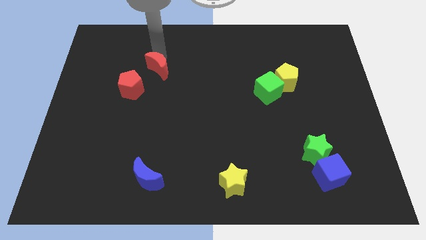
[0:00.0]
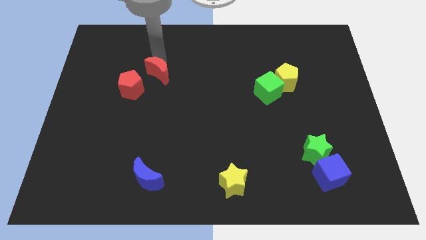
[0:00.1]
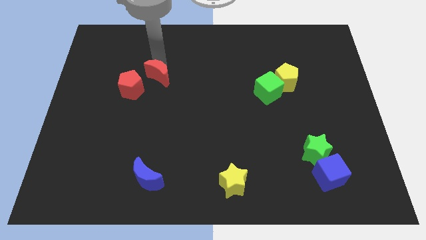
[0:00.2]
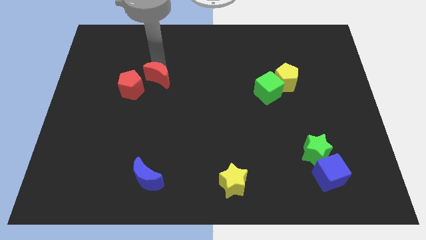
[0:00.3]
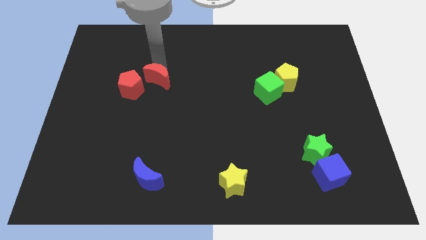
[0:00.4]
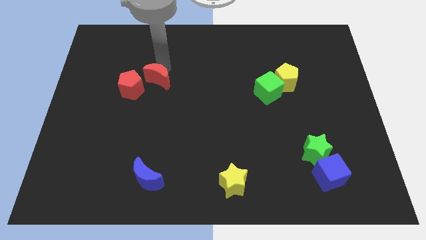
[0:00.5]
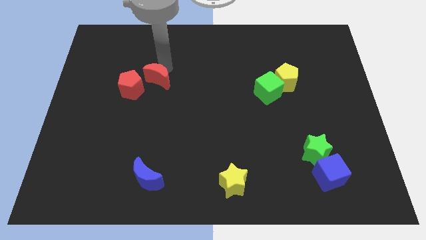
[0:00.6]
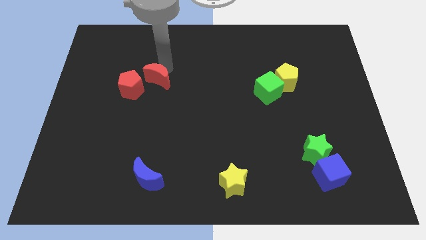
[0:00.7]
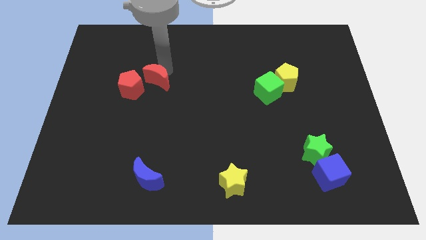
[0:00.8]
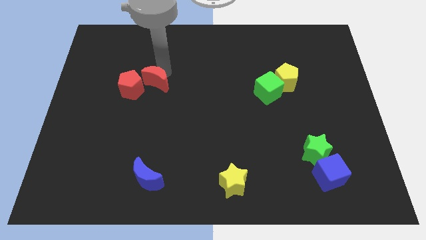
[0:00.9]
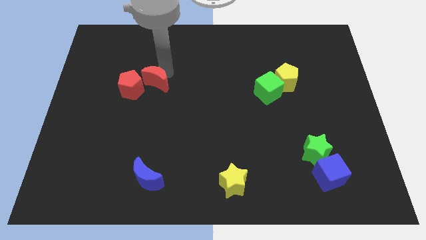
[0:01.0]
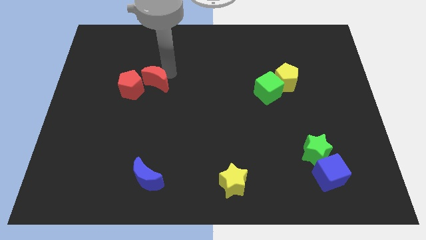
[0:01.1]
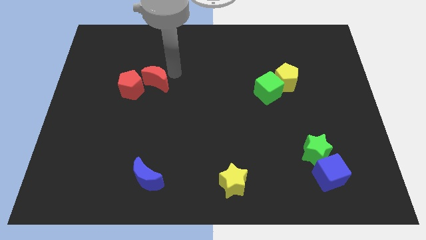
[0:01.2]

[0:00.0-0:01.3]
move red crescent towards the red pentagon

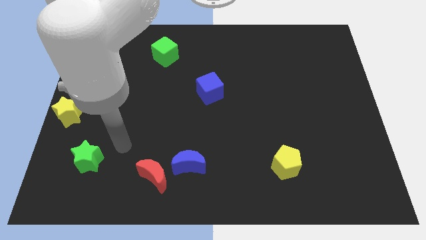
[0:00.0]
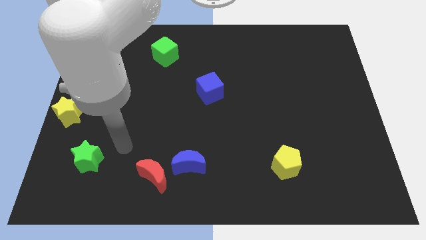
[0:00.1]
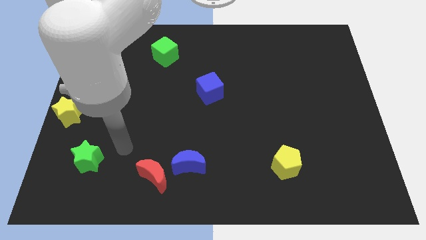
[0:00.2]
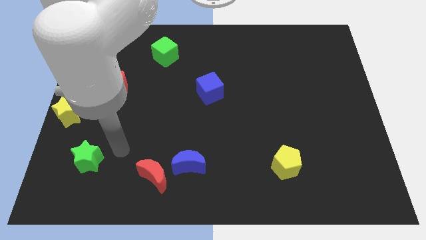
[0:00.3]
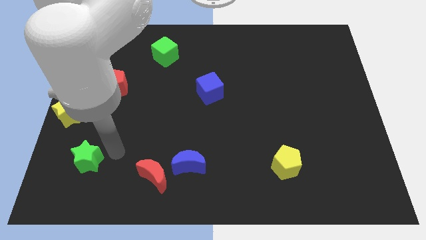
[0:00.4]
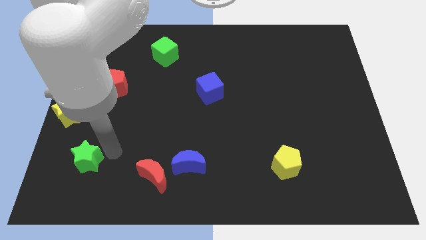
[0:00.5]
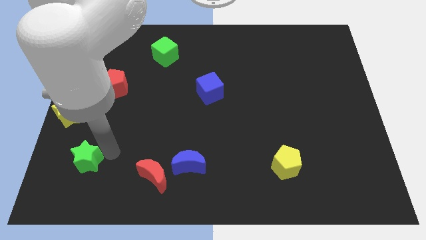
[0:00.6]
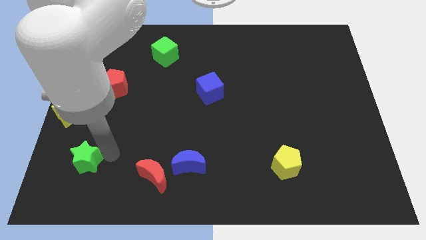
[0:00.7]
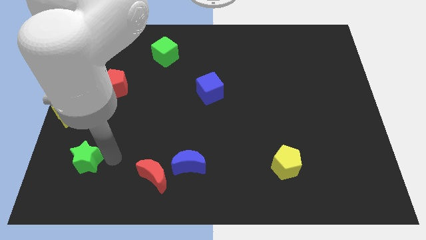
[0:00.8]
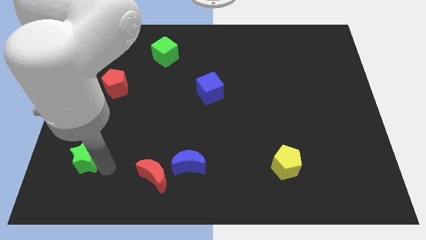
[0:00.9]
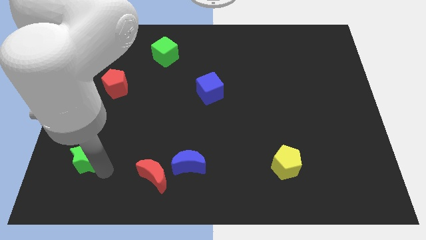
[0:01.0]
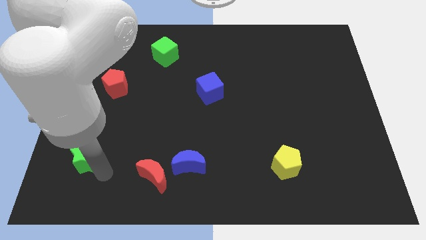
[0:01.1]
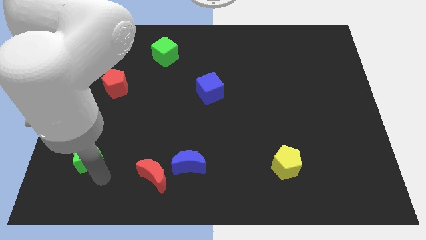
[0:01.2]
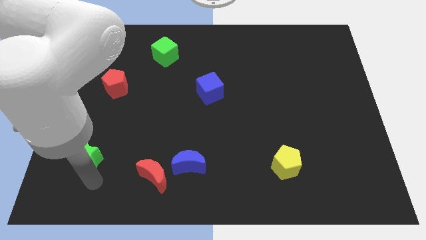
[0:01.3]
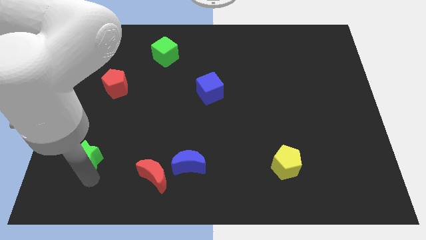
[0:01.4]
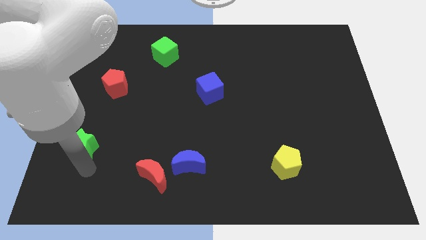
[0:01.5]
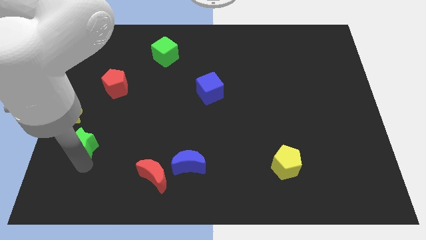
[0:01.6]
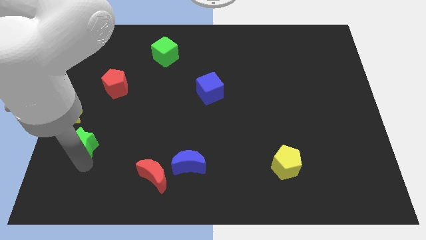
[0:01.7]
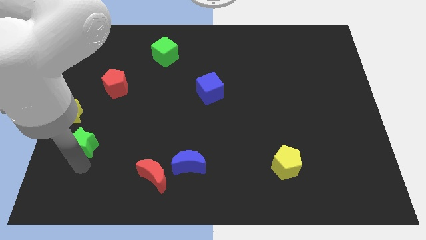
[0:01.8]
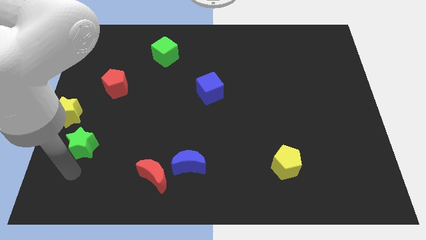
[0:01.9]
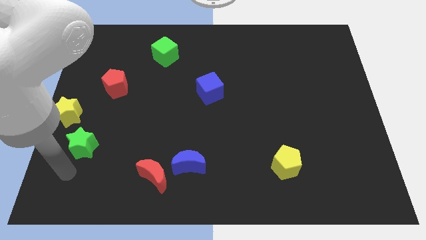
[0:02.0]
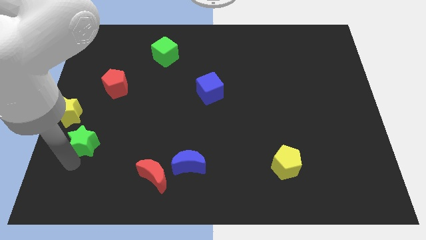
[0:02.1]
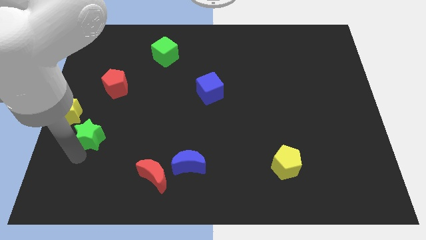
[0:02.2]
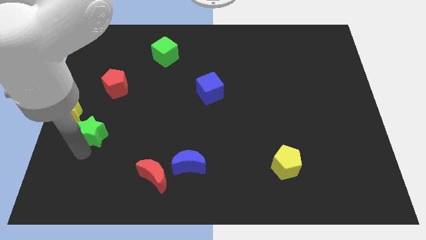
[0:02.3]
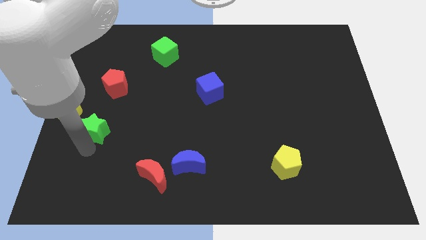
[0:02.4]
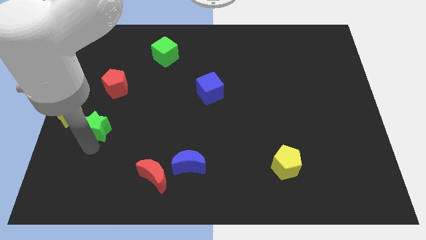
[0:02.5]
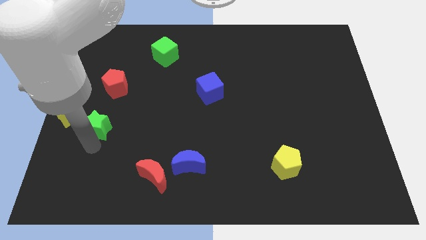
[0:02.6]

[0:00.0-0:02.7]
push the green star upward

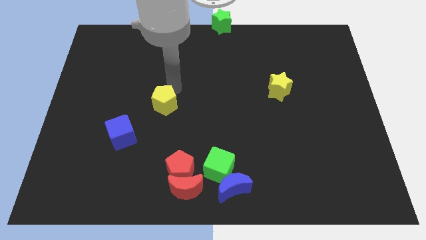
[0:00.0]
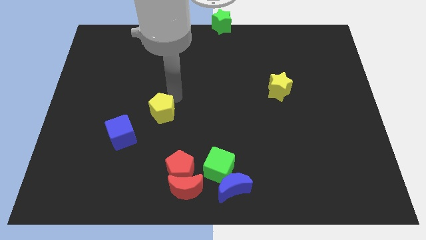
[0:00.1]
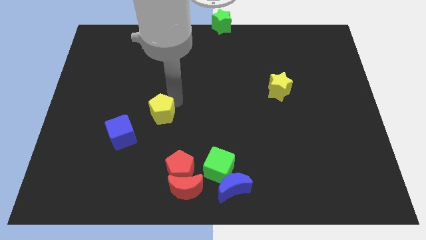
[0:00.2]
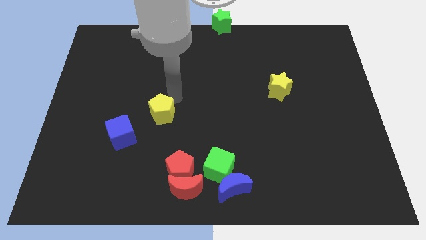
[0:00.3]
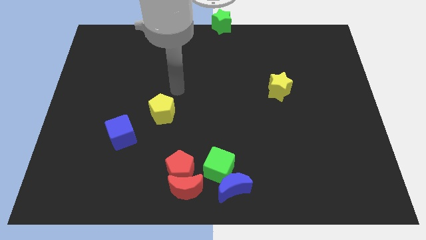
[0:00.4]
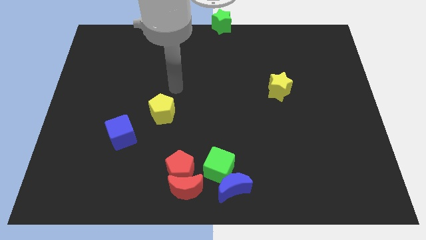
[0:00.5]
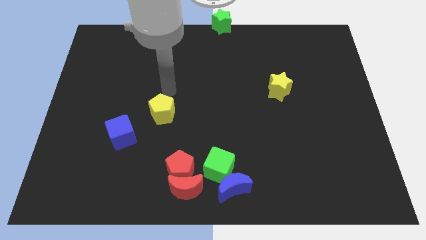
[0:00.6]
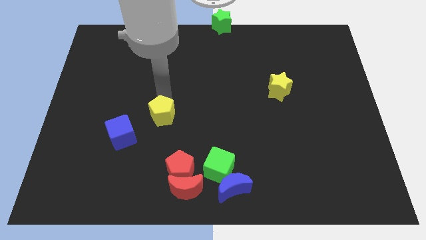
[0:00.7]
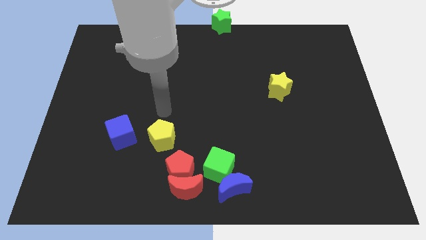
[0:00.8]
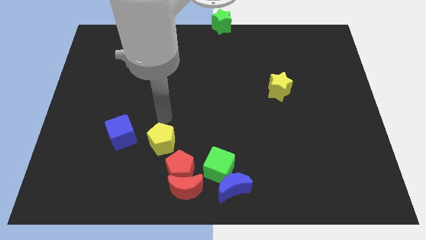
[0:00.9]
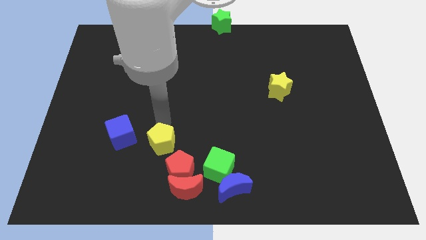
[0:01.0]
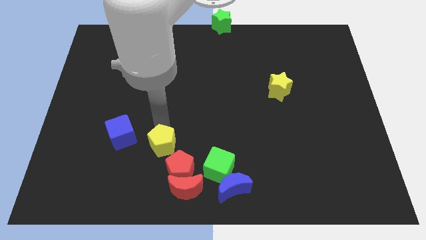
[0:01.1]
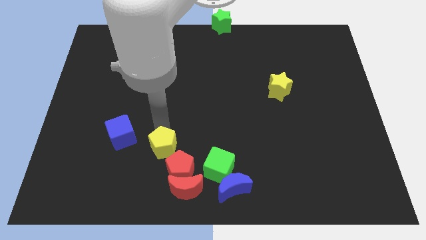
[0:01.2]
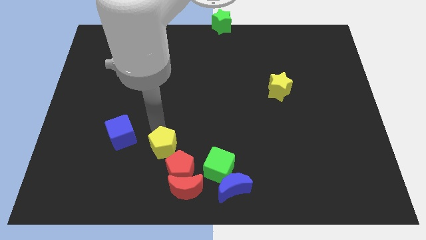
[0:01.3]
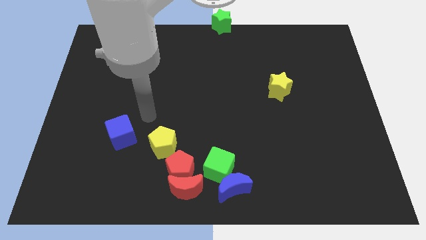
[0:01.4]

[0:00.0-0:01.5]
push the yellow pentagon close to the red pentagon

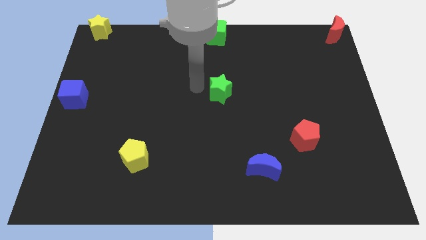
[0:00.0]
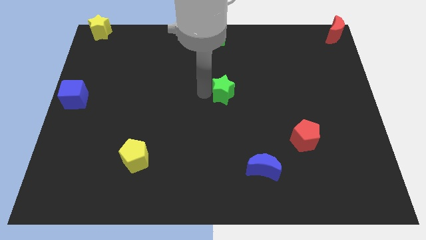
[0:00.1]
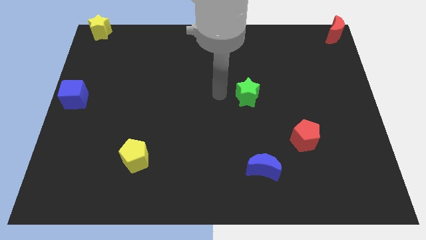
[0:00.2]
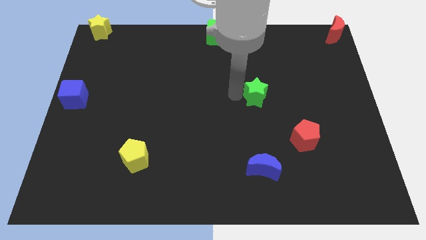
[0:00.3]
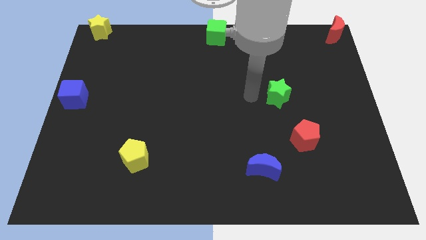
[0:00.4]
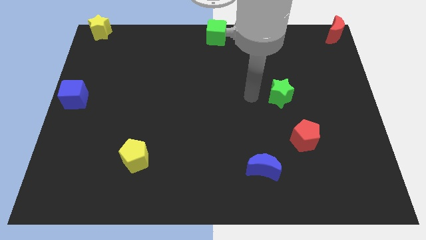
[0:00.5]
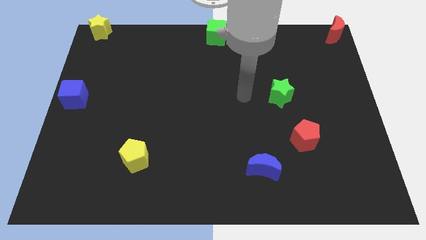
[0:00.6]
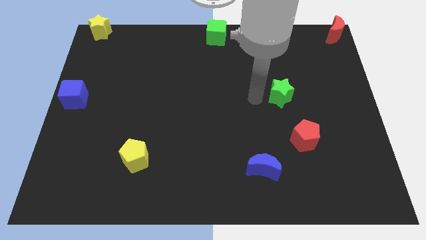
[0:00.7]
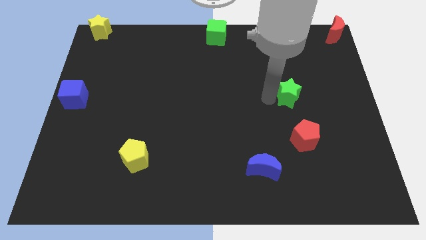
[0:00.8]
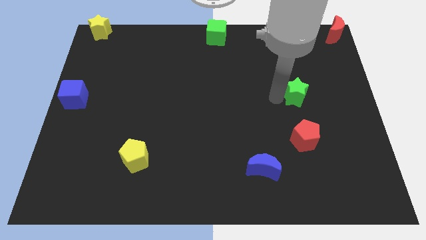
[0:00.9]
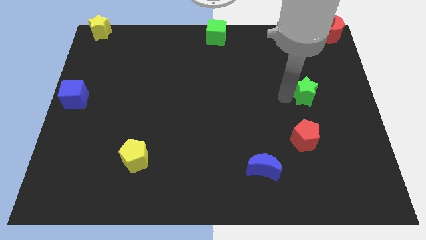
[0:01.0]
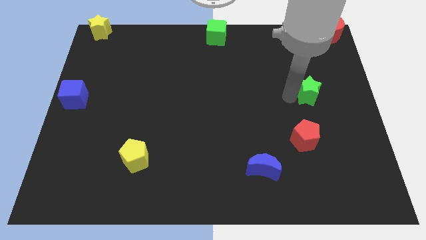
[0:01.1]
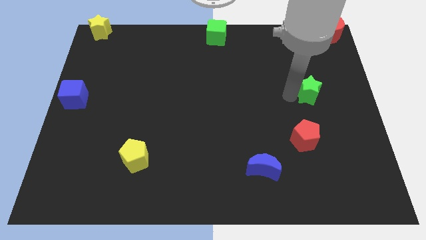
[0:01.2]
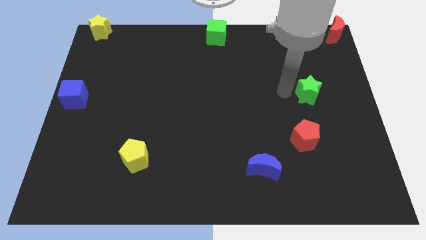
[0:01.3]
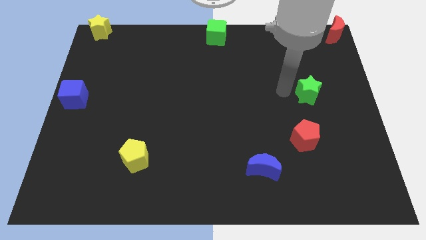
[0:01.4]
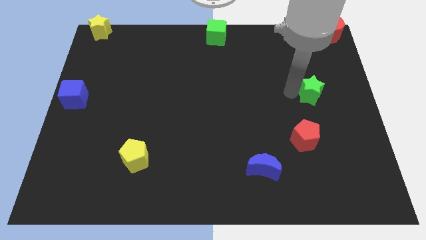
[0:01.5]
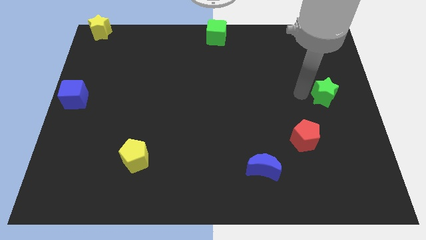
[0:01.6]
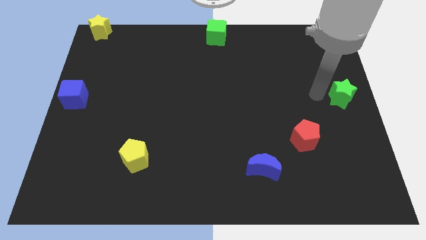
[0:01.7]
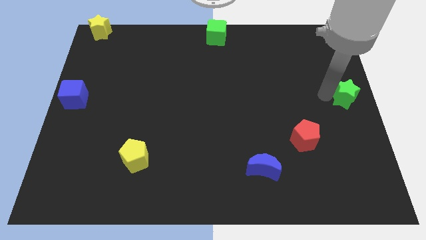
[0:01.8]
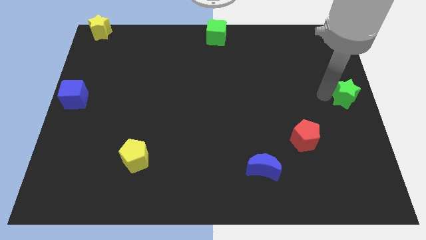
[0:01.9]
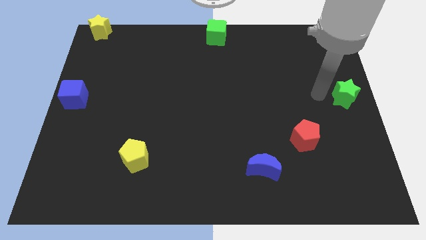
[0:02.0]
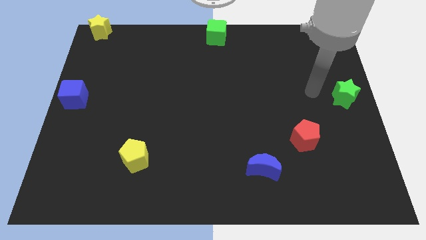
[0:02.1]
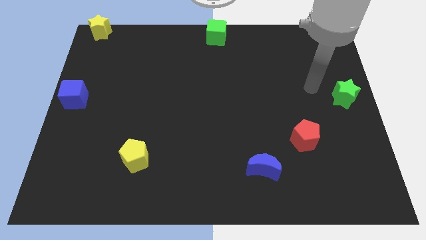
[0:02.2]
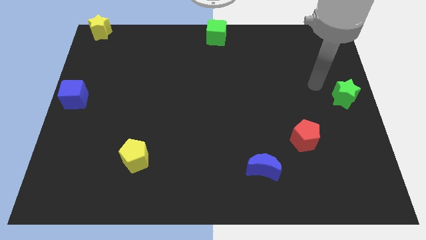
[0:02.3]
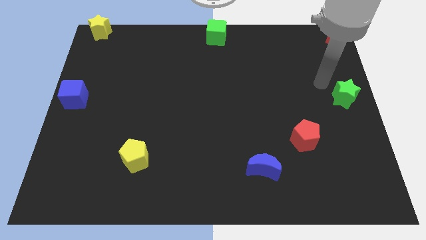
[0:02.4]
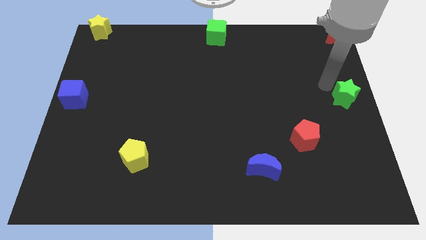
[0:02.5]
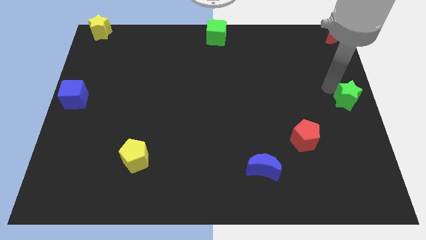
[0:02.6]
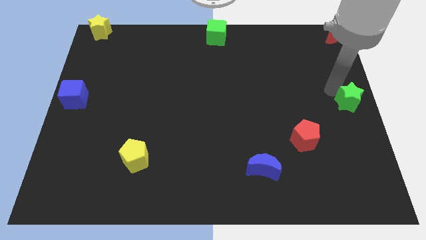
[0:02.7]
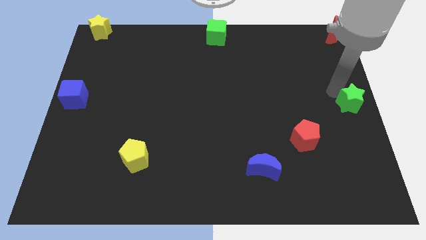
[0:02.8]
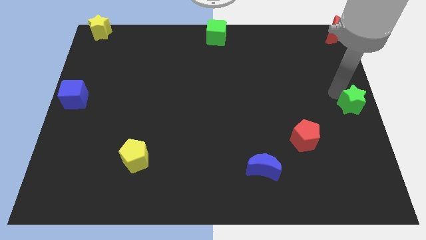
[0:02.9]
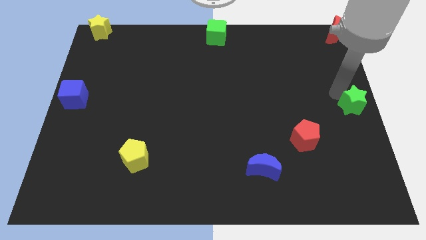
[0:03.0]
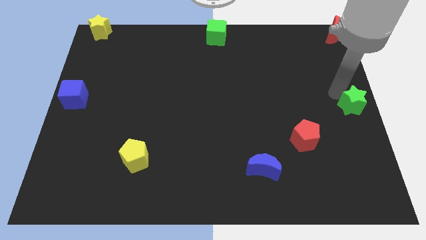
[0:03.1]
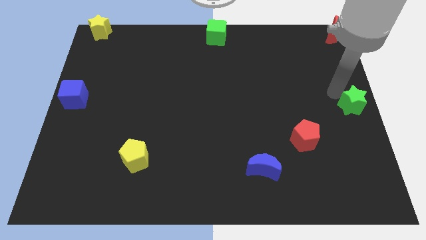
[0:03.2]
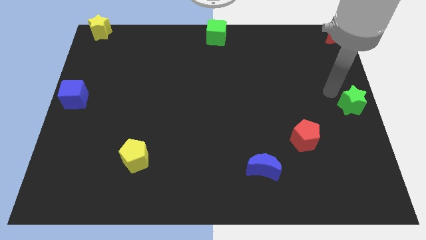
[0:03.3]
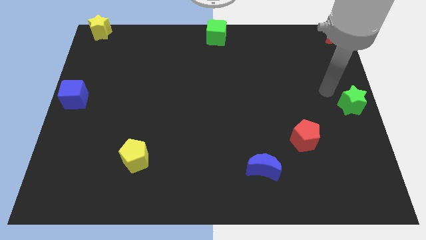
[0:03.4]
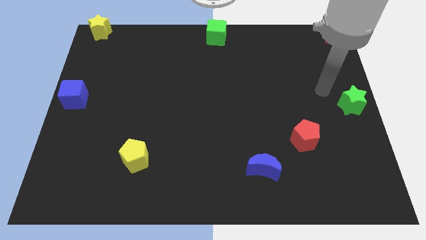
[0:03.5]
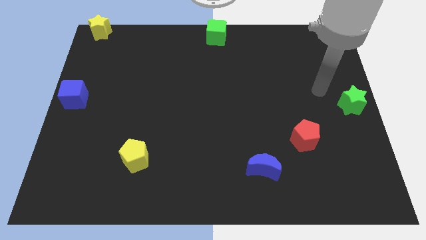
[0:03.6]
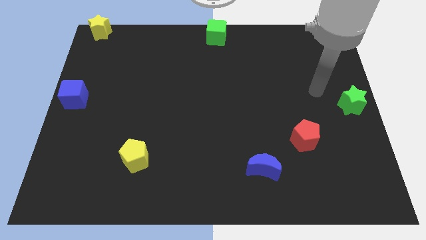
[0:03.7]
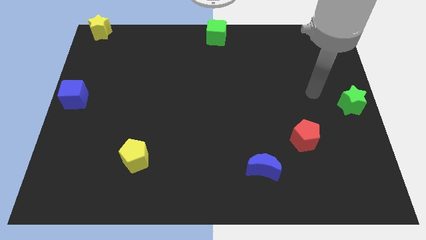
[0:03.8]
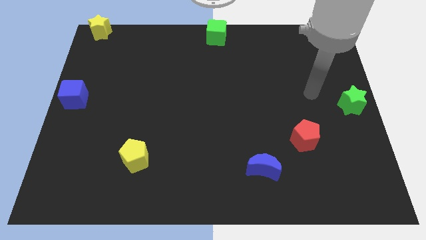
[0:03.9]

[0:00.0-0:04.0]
place the green star to the right center of the board
